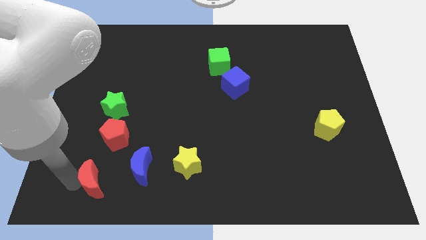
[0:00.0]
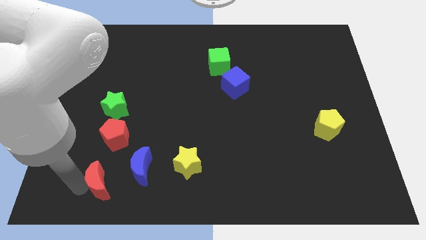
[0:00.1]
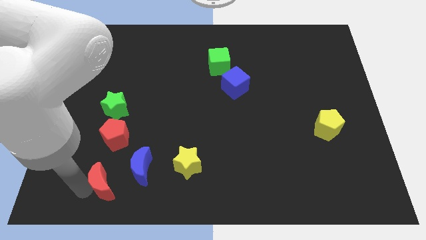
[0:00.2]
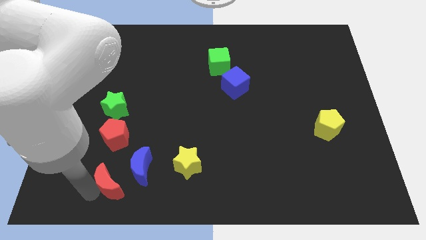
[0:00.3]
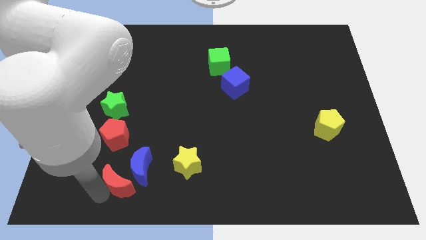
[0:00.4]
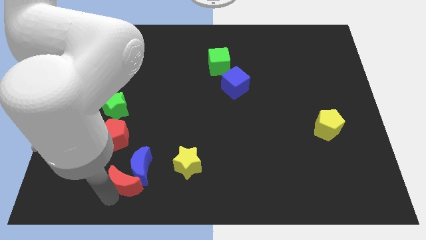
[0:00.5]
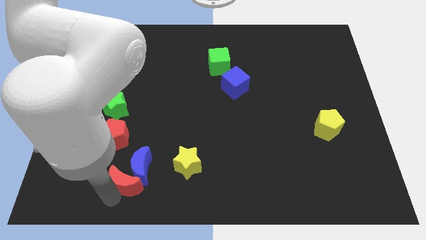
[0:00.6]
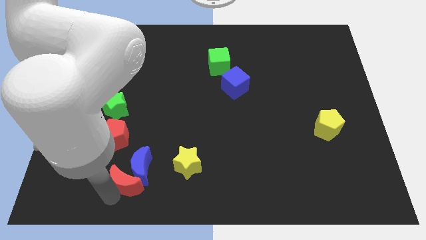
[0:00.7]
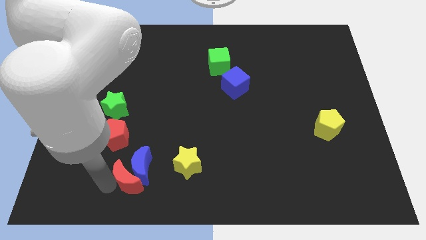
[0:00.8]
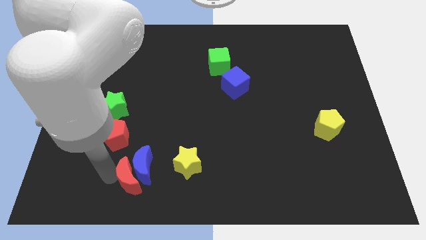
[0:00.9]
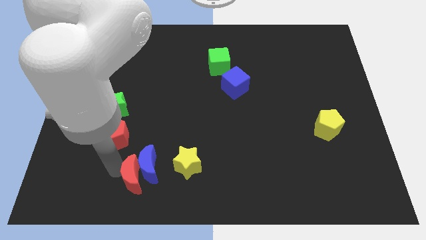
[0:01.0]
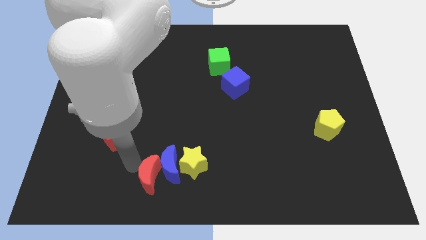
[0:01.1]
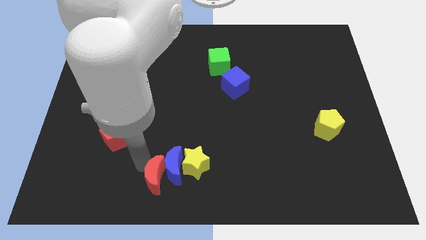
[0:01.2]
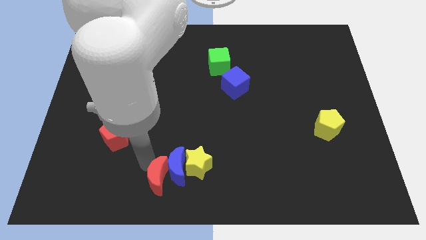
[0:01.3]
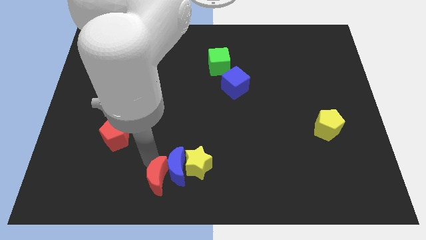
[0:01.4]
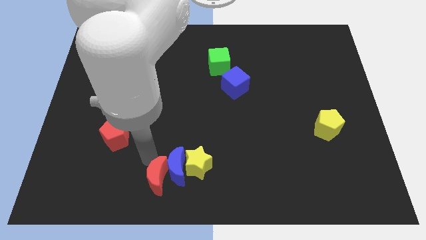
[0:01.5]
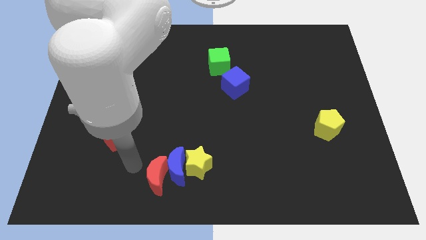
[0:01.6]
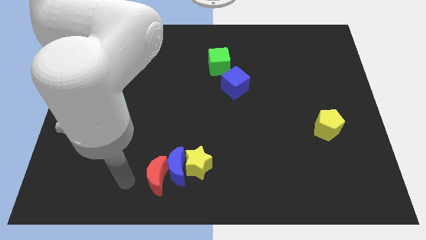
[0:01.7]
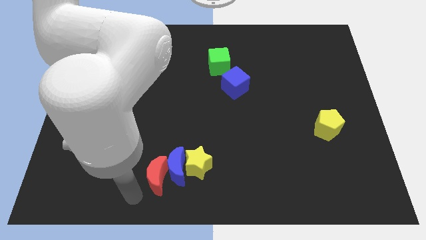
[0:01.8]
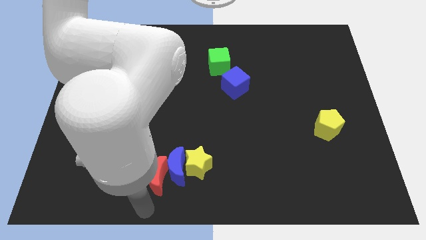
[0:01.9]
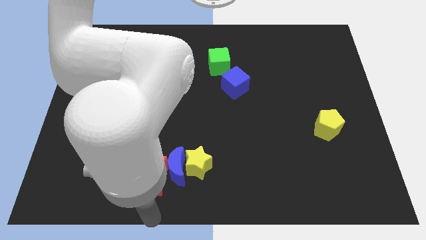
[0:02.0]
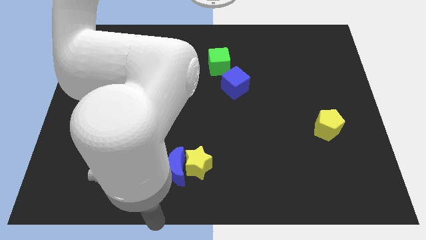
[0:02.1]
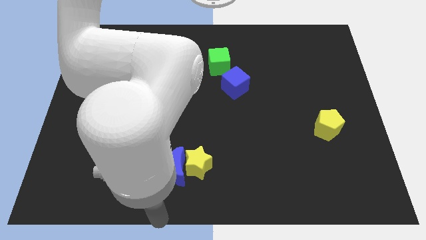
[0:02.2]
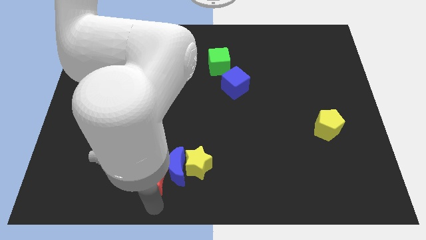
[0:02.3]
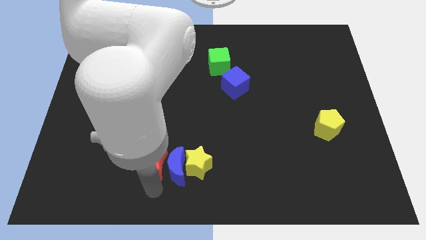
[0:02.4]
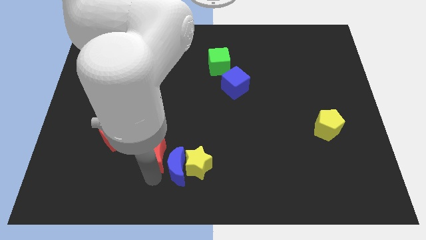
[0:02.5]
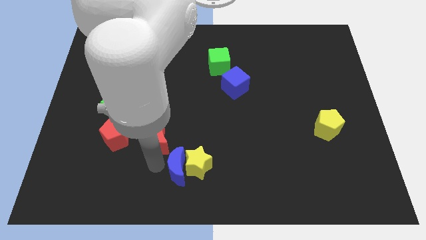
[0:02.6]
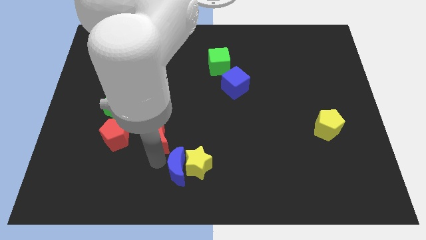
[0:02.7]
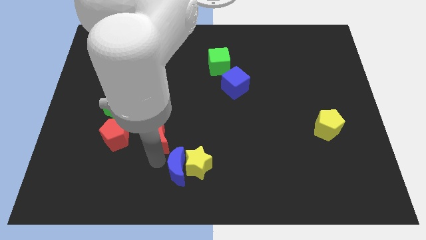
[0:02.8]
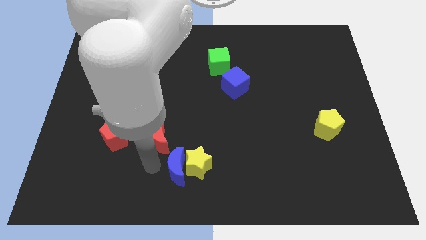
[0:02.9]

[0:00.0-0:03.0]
push red crescent to right of red pentagon

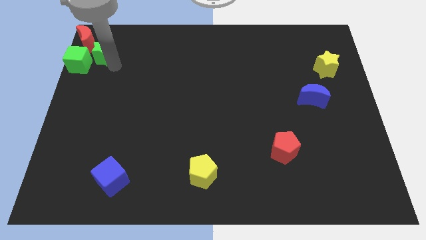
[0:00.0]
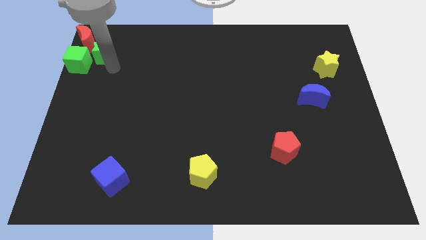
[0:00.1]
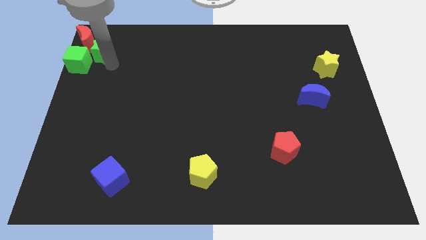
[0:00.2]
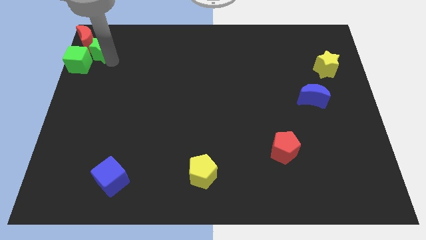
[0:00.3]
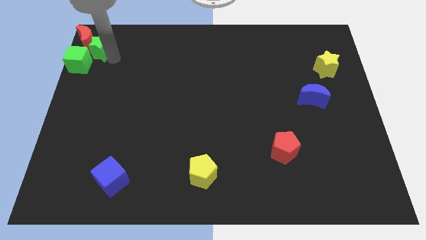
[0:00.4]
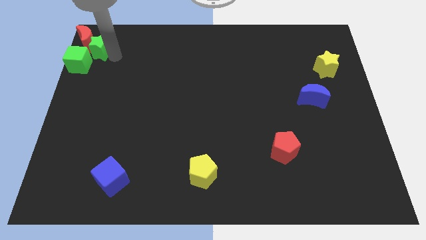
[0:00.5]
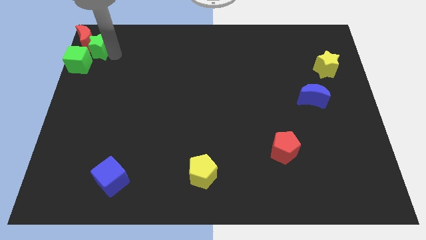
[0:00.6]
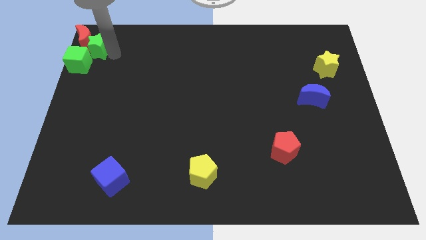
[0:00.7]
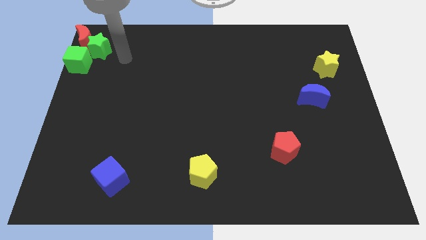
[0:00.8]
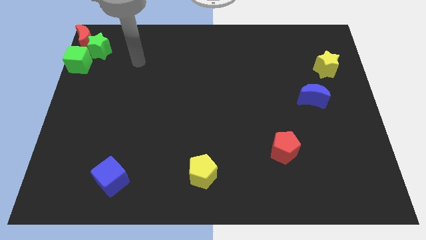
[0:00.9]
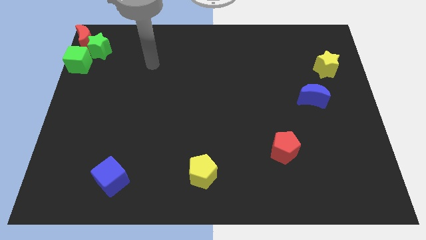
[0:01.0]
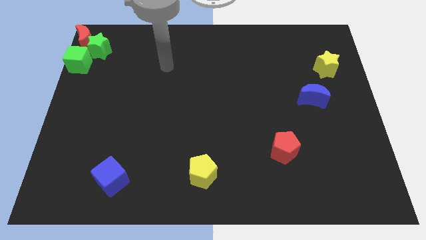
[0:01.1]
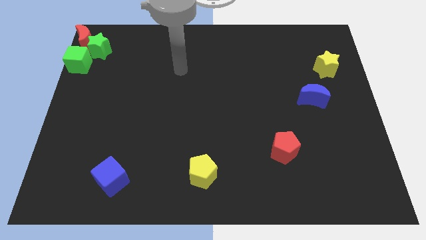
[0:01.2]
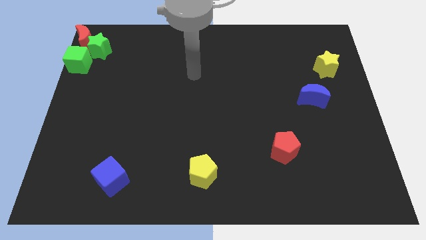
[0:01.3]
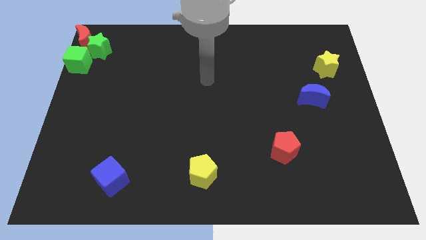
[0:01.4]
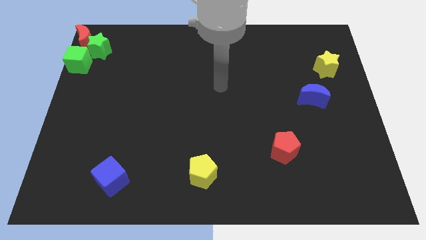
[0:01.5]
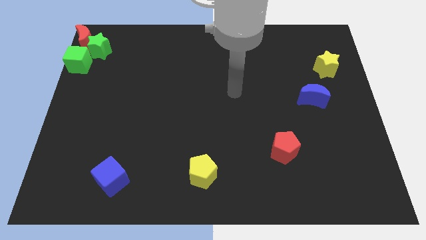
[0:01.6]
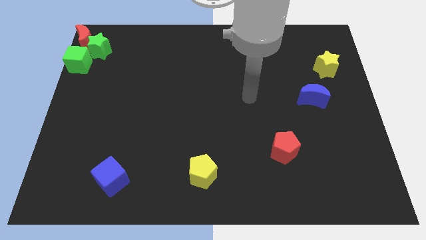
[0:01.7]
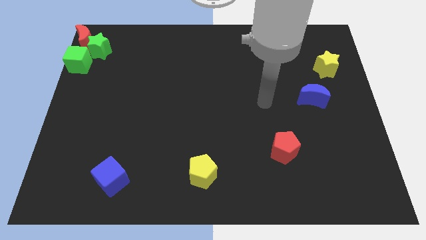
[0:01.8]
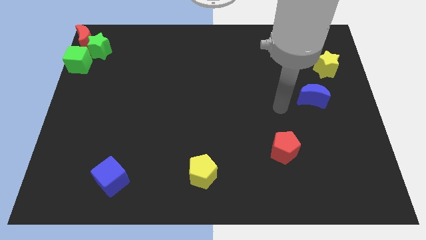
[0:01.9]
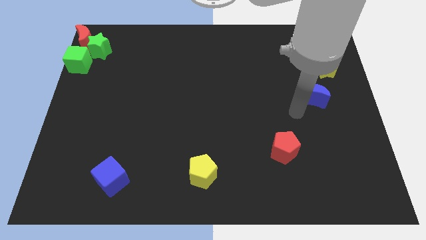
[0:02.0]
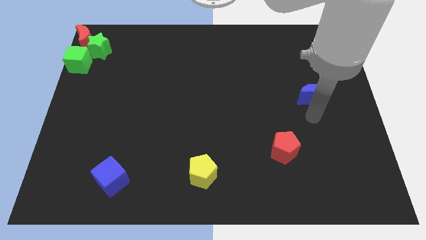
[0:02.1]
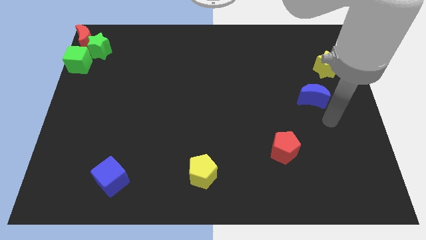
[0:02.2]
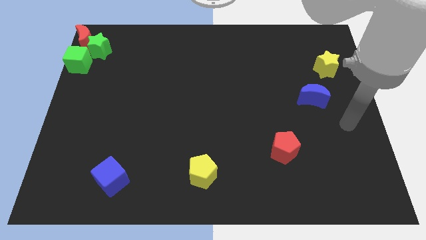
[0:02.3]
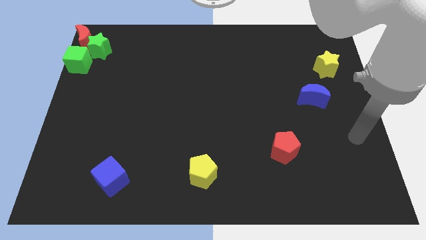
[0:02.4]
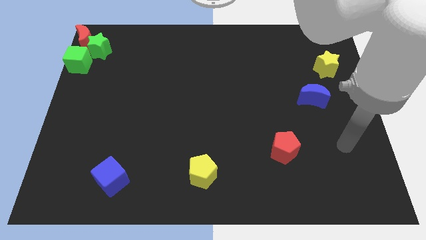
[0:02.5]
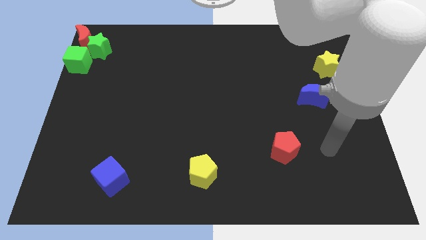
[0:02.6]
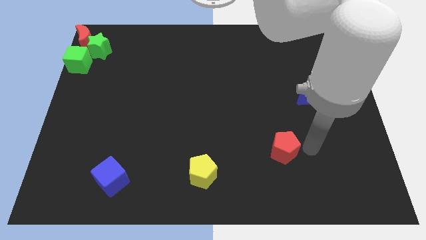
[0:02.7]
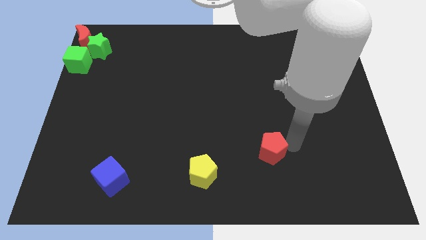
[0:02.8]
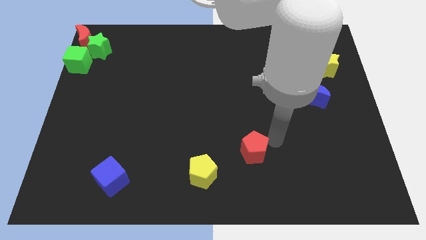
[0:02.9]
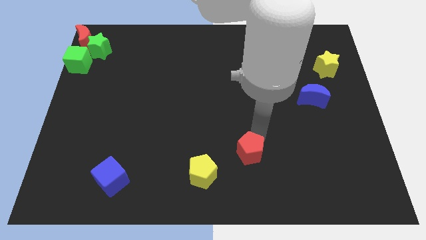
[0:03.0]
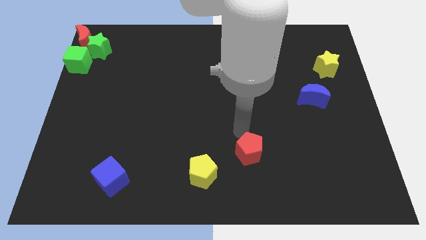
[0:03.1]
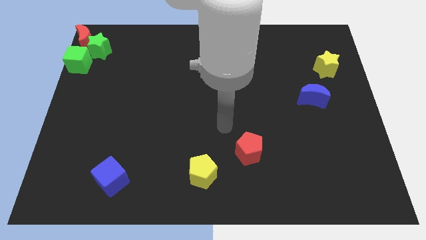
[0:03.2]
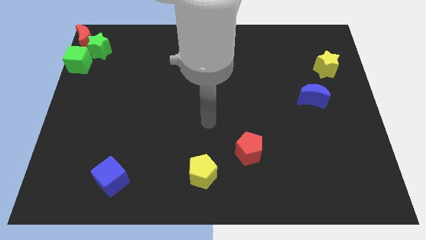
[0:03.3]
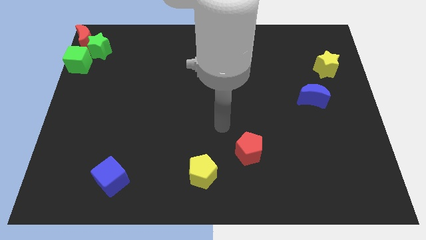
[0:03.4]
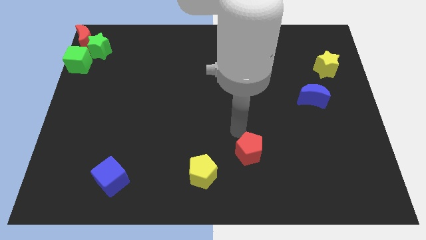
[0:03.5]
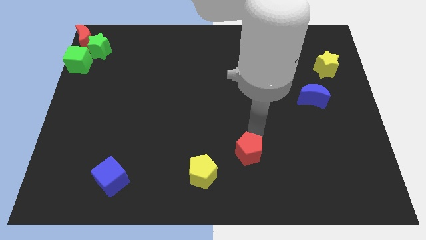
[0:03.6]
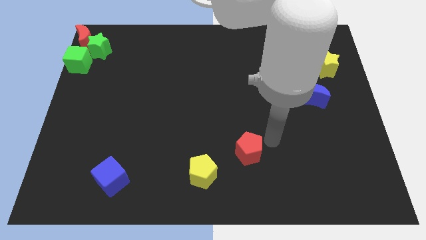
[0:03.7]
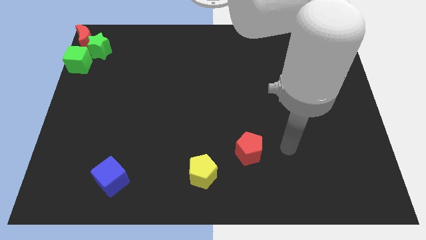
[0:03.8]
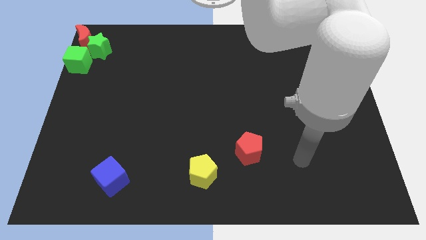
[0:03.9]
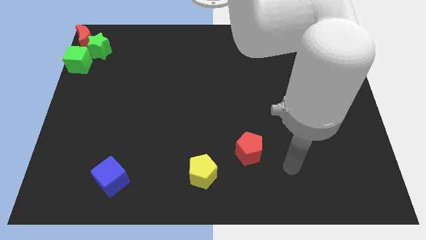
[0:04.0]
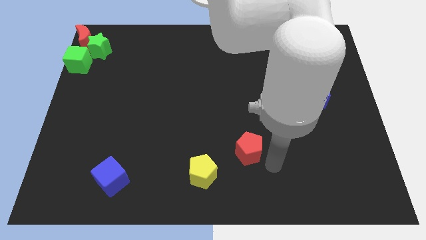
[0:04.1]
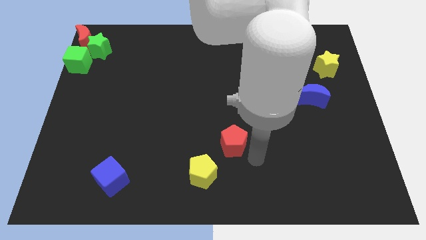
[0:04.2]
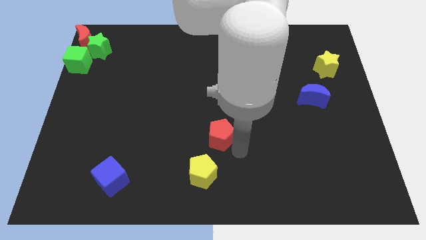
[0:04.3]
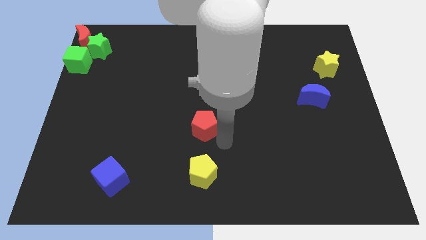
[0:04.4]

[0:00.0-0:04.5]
push the red pentagon to the top of the yellow pentagon

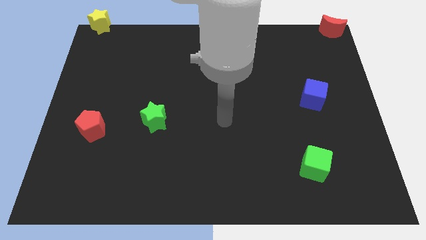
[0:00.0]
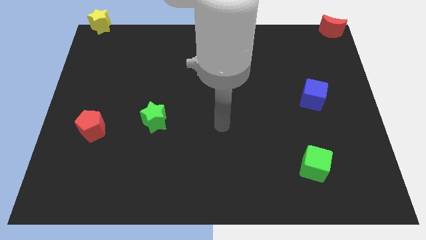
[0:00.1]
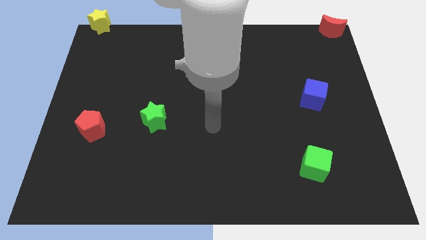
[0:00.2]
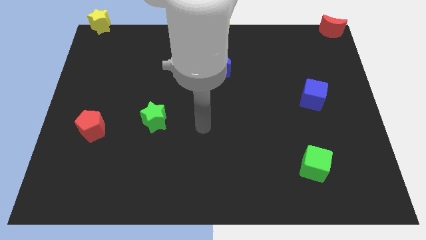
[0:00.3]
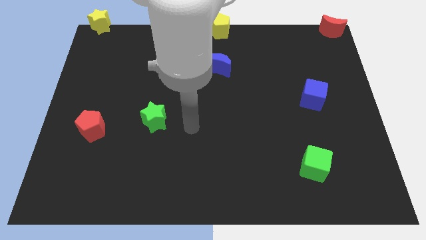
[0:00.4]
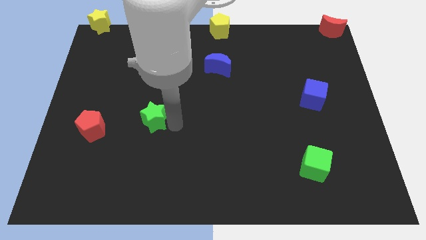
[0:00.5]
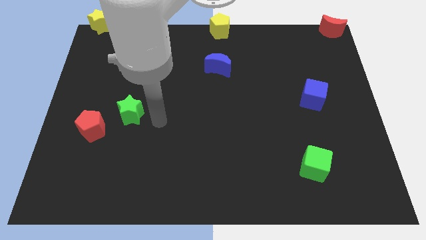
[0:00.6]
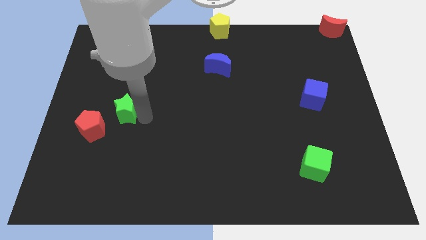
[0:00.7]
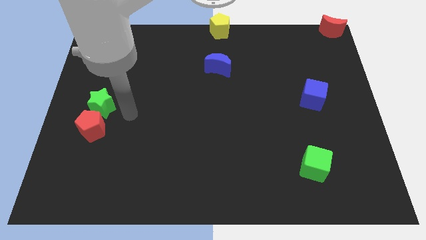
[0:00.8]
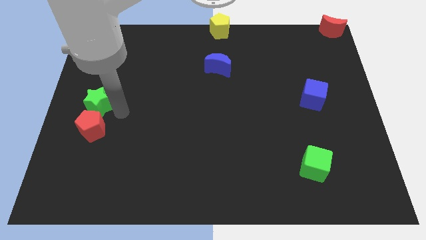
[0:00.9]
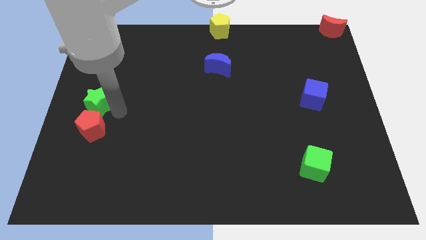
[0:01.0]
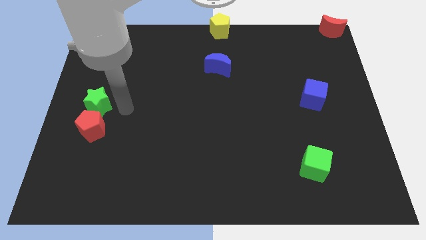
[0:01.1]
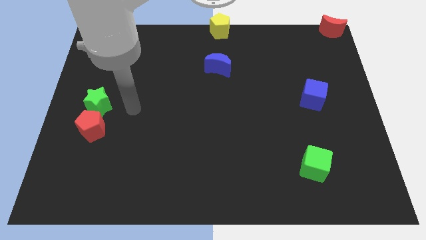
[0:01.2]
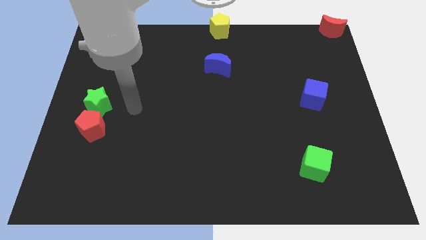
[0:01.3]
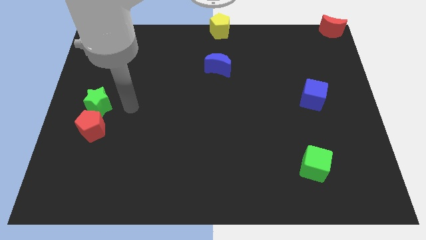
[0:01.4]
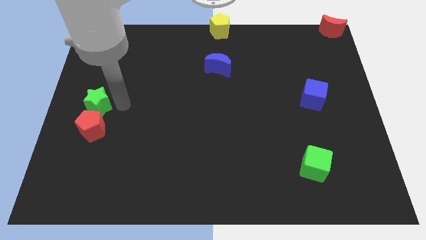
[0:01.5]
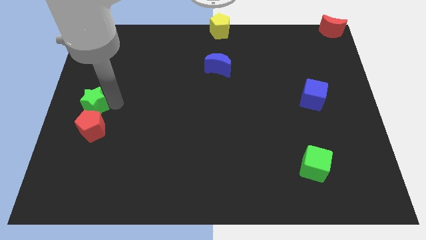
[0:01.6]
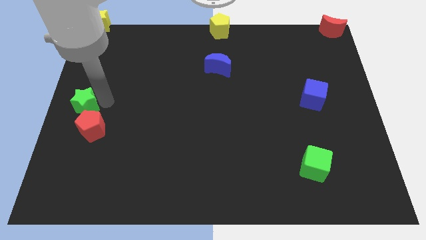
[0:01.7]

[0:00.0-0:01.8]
slide the green star to the top side of the red pentagon
